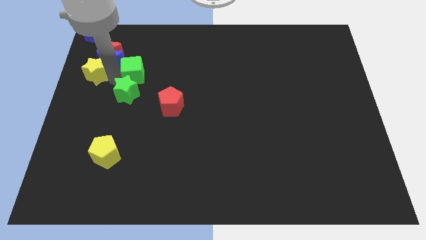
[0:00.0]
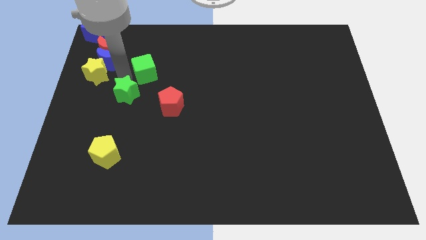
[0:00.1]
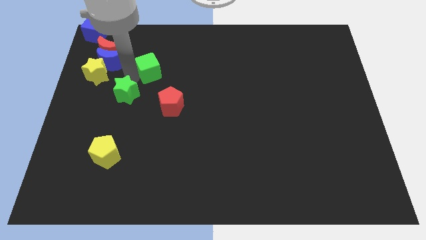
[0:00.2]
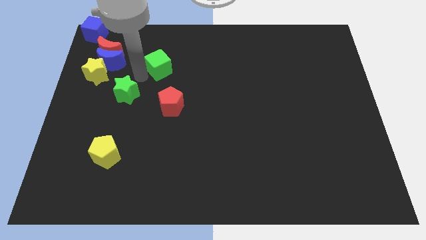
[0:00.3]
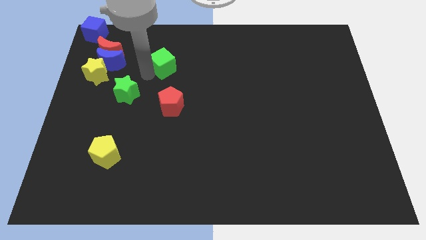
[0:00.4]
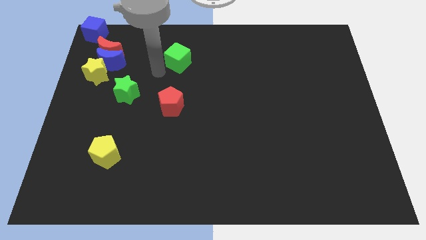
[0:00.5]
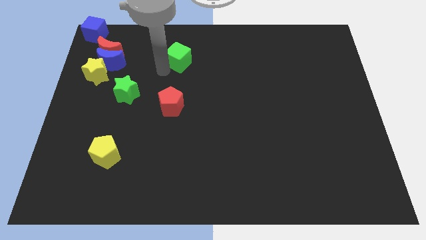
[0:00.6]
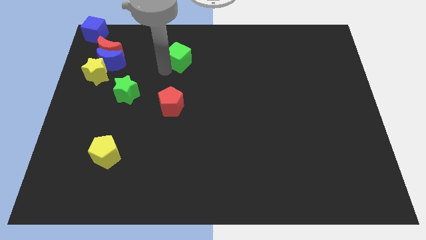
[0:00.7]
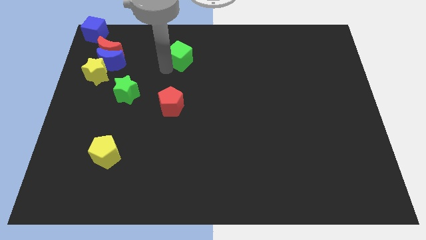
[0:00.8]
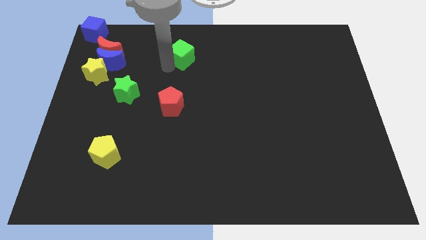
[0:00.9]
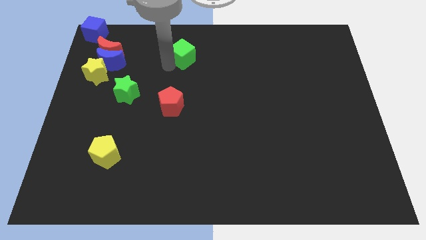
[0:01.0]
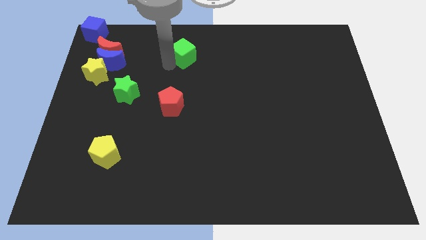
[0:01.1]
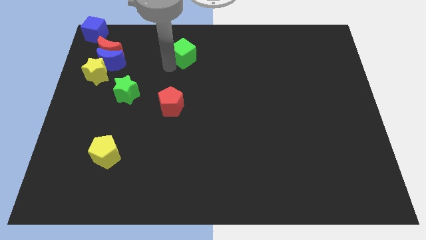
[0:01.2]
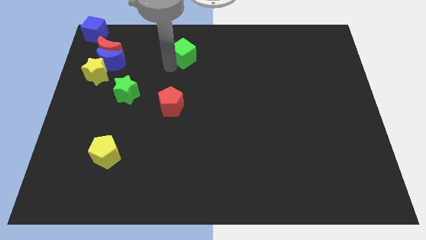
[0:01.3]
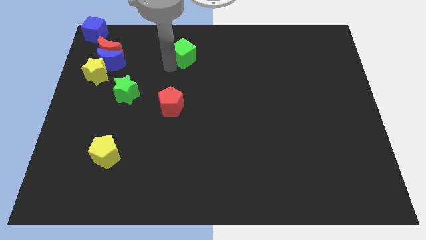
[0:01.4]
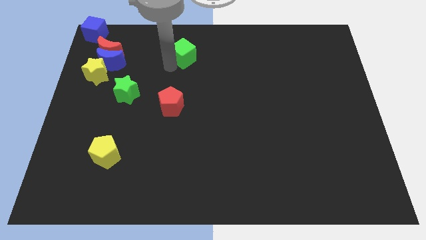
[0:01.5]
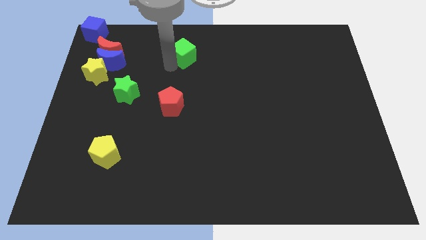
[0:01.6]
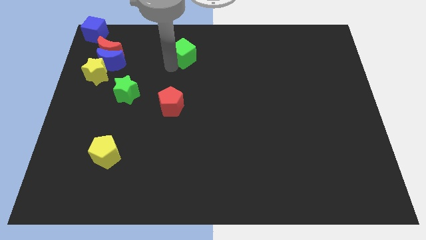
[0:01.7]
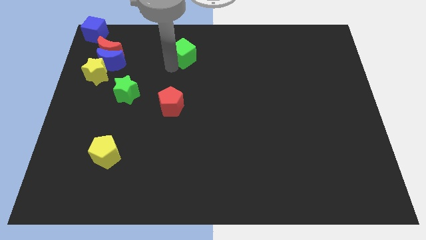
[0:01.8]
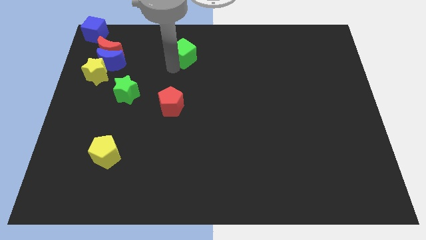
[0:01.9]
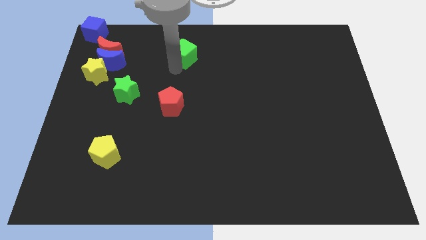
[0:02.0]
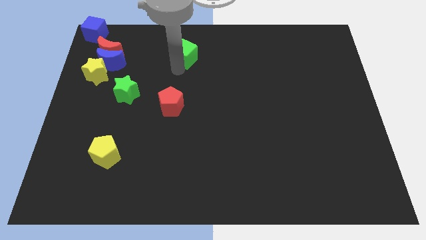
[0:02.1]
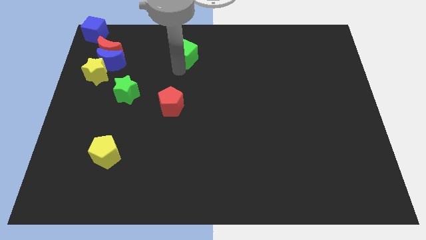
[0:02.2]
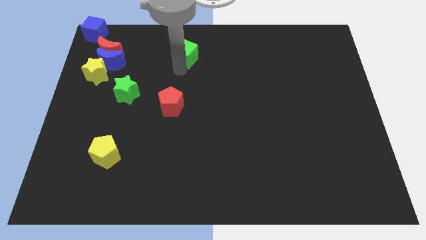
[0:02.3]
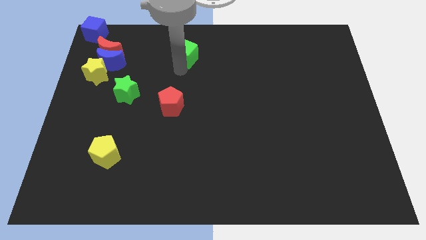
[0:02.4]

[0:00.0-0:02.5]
push green cube away from green star

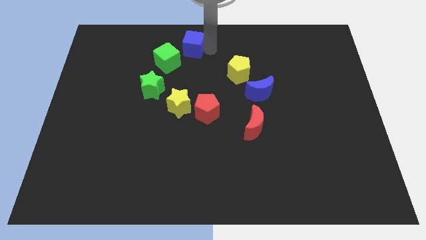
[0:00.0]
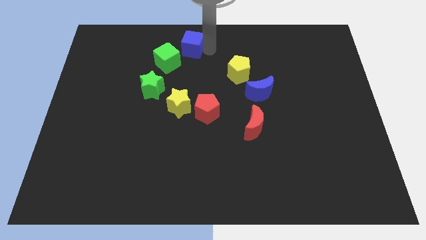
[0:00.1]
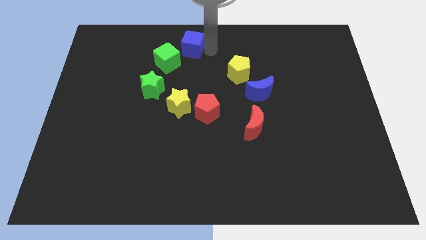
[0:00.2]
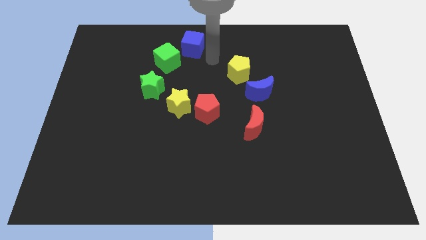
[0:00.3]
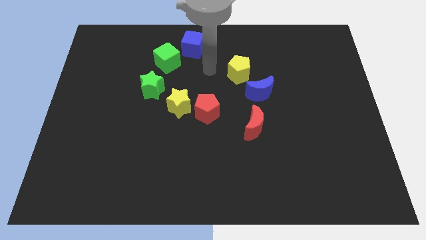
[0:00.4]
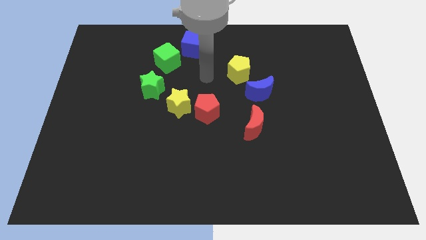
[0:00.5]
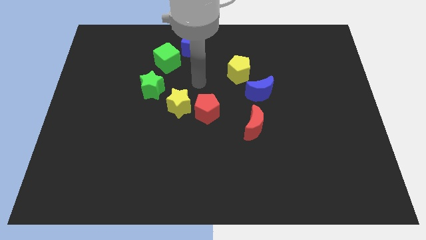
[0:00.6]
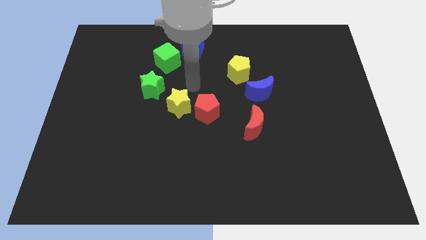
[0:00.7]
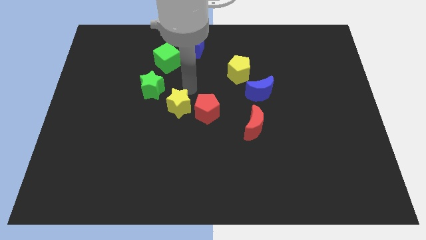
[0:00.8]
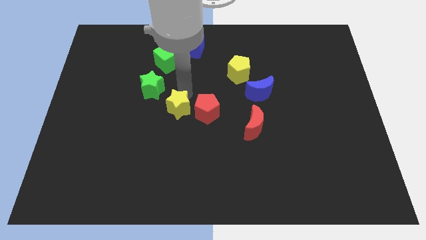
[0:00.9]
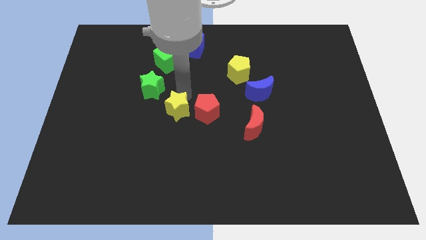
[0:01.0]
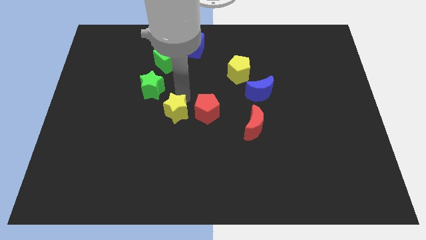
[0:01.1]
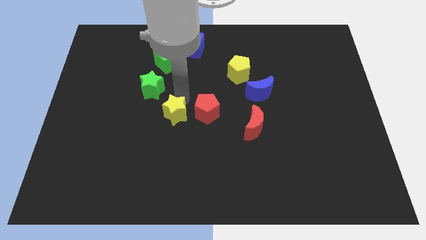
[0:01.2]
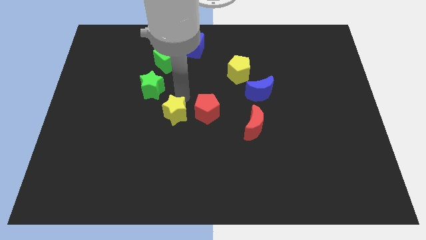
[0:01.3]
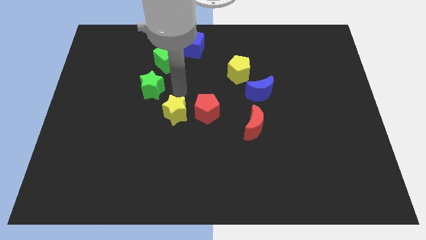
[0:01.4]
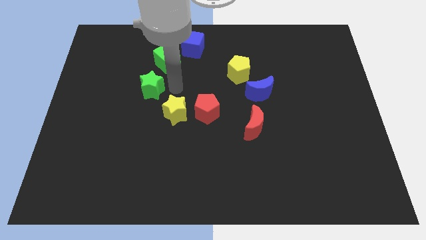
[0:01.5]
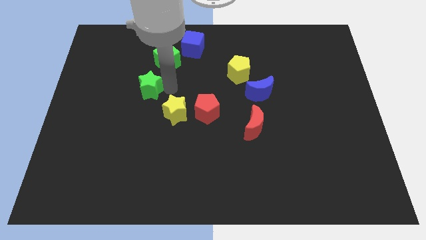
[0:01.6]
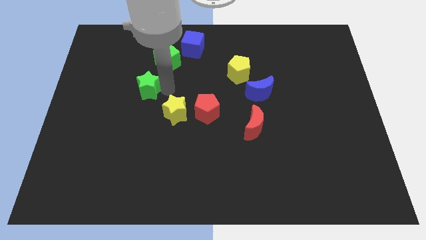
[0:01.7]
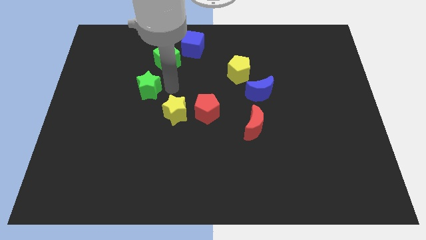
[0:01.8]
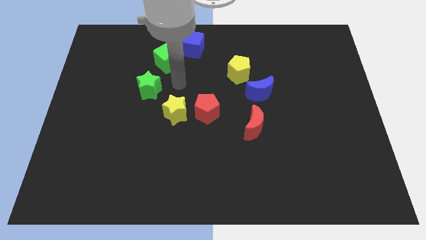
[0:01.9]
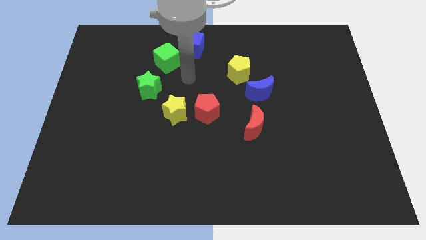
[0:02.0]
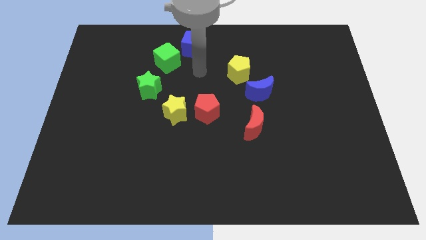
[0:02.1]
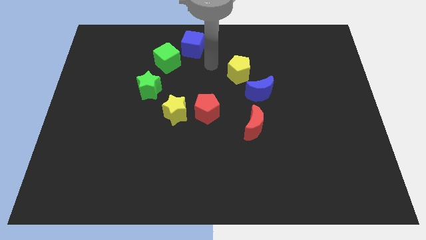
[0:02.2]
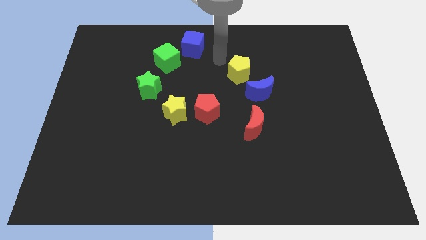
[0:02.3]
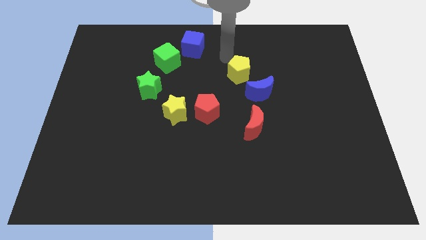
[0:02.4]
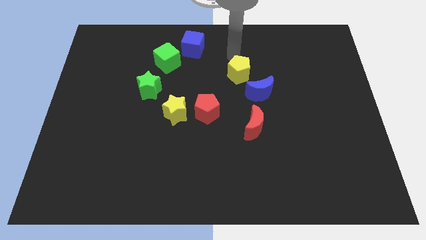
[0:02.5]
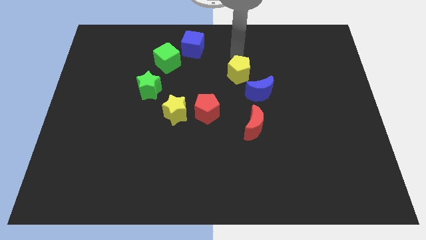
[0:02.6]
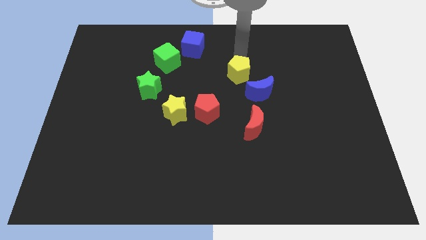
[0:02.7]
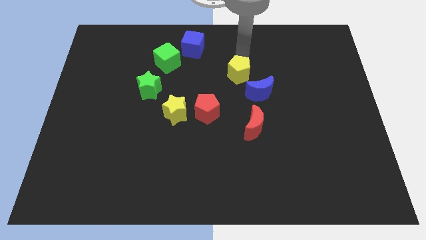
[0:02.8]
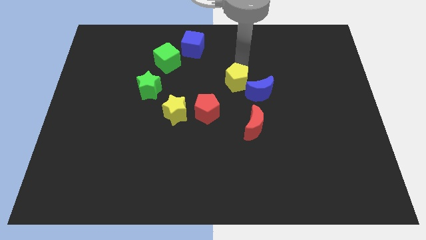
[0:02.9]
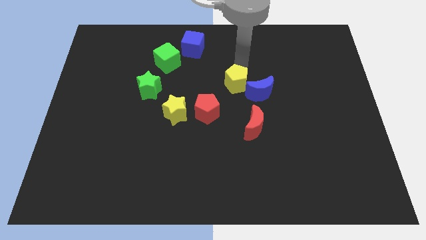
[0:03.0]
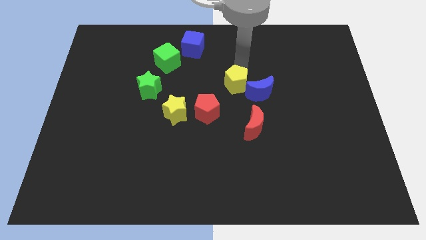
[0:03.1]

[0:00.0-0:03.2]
move the yellow star to the left side of the red pentagon

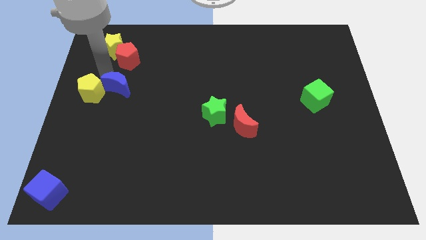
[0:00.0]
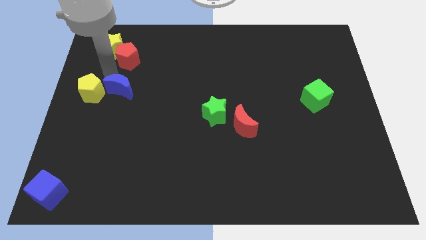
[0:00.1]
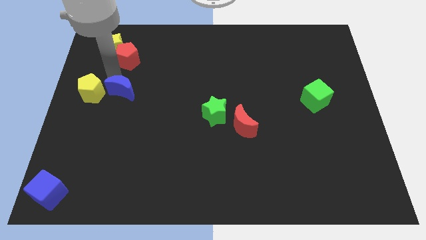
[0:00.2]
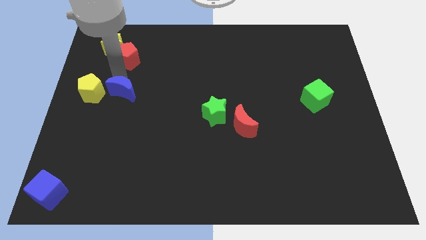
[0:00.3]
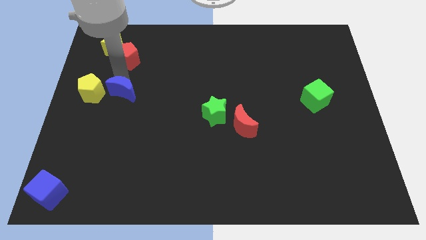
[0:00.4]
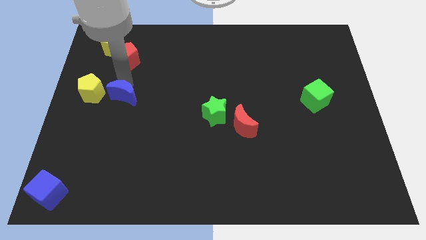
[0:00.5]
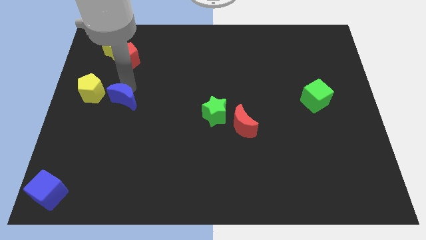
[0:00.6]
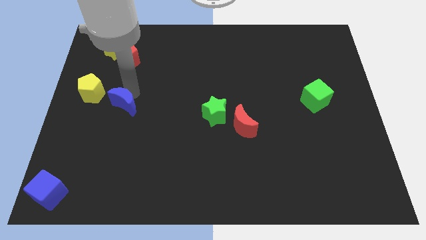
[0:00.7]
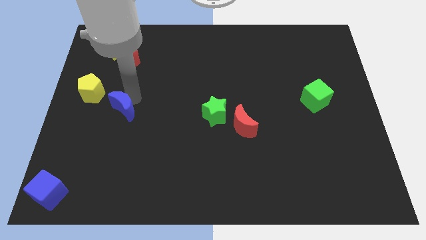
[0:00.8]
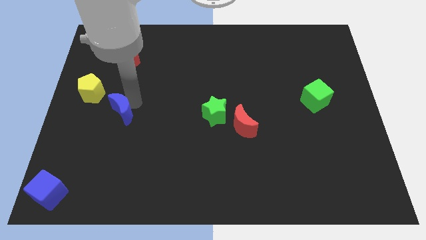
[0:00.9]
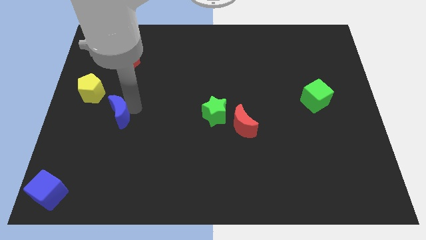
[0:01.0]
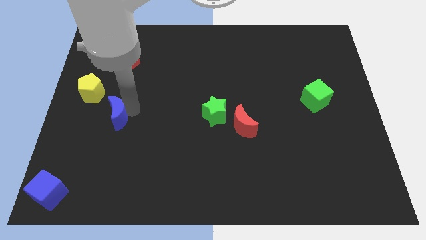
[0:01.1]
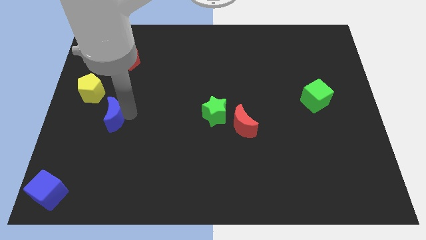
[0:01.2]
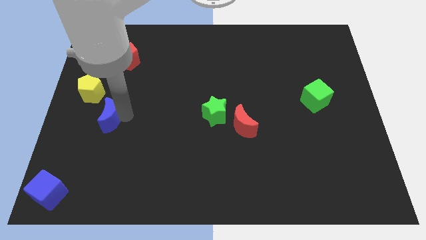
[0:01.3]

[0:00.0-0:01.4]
move the blue moon to the bottom right side of the yellow pentagon

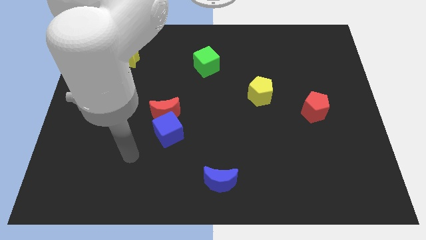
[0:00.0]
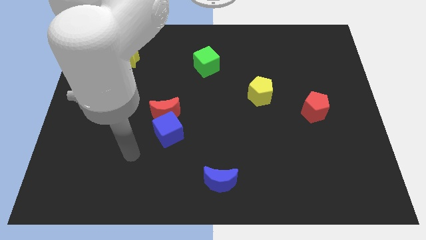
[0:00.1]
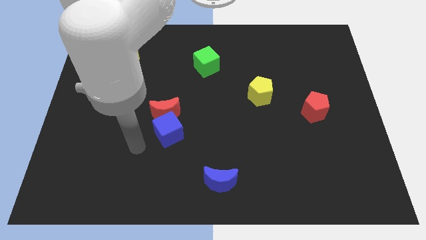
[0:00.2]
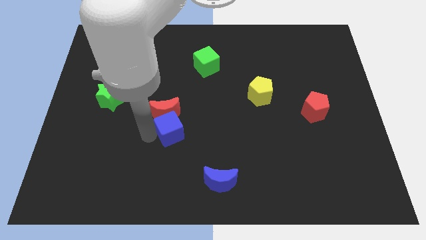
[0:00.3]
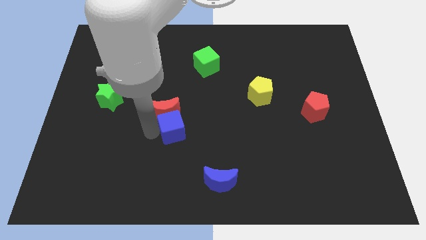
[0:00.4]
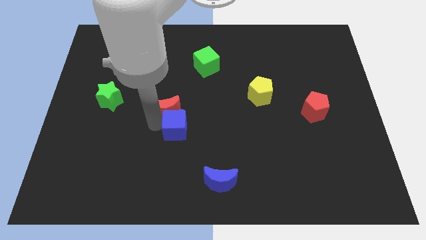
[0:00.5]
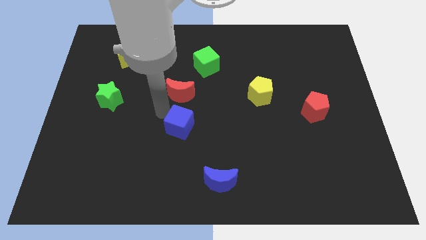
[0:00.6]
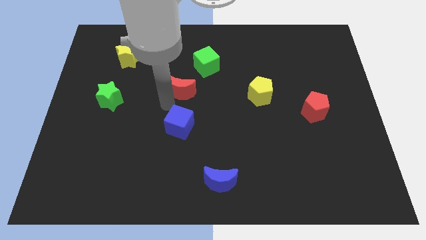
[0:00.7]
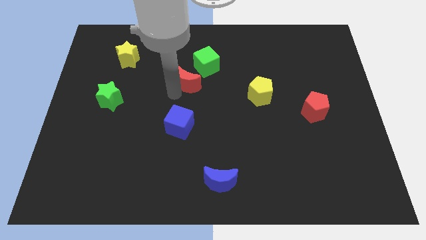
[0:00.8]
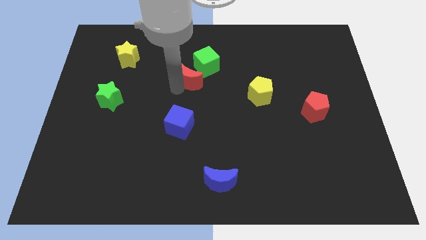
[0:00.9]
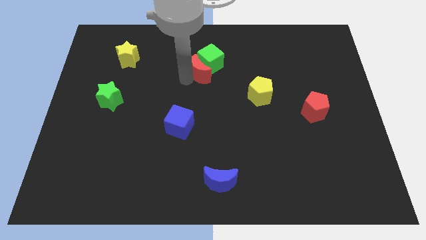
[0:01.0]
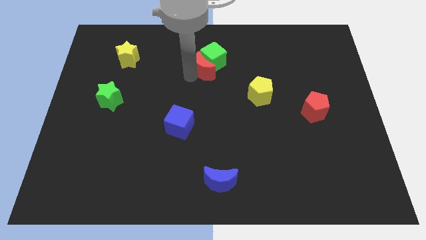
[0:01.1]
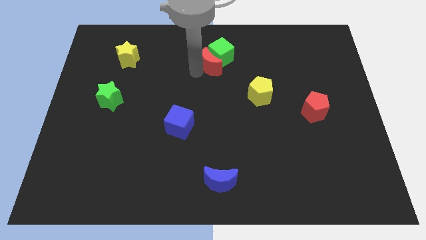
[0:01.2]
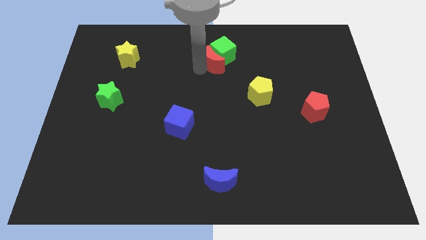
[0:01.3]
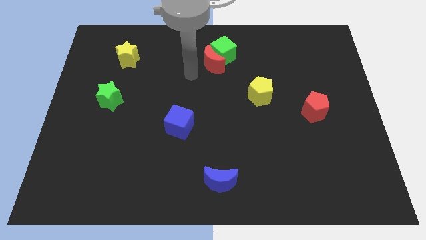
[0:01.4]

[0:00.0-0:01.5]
push the red crescent into the green cube

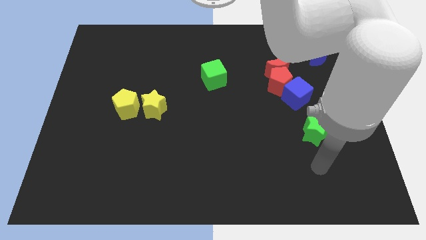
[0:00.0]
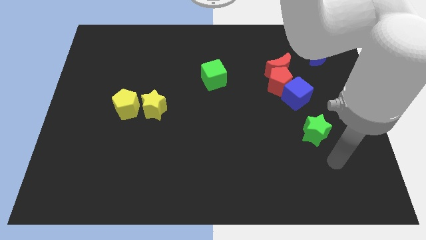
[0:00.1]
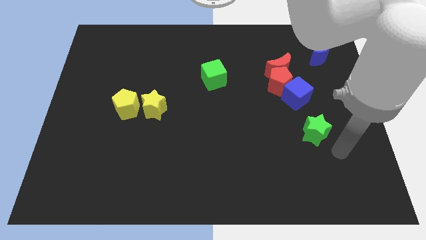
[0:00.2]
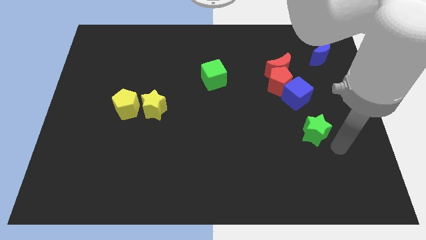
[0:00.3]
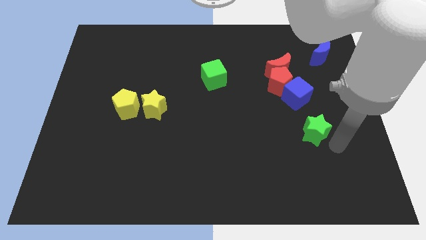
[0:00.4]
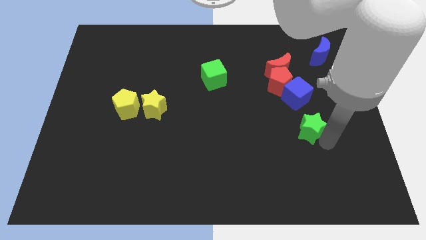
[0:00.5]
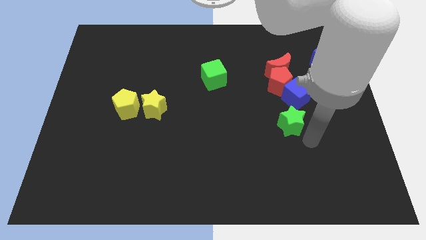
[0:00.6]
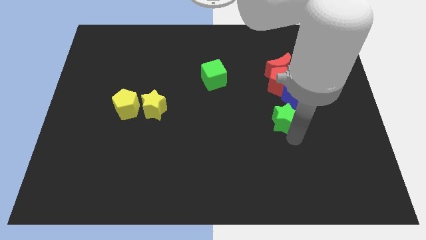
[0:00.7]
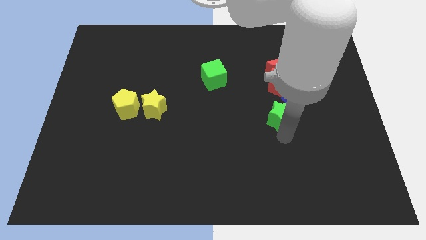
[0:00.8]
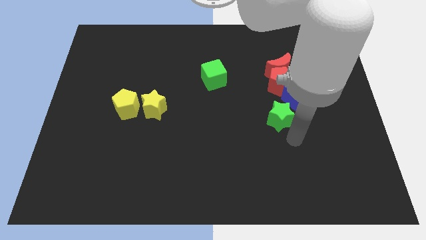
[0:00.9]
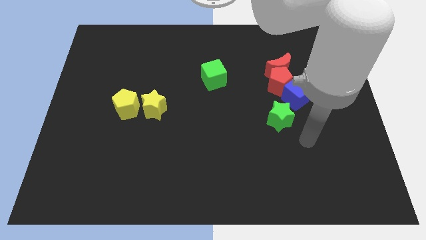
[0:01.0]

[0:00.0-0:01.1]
move the green star to the bottom left of the blue cube
